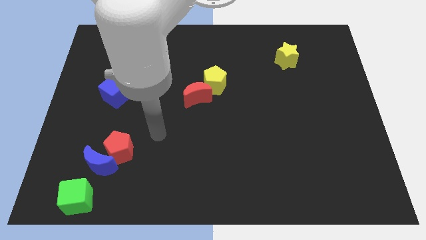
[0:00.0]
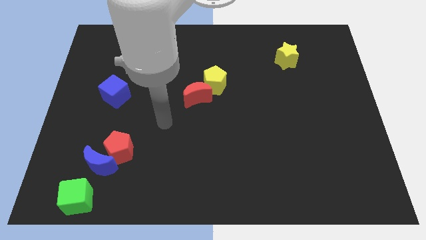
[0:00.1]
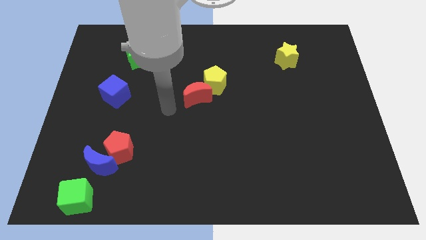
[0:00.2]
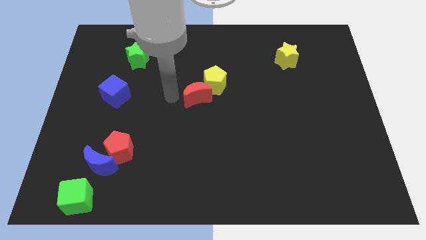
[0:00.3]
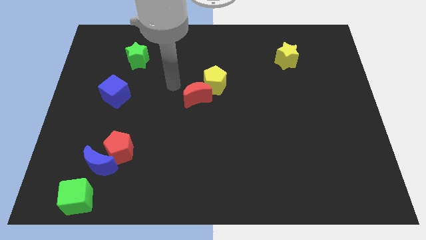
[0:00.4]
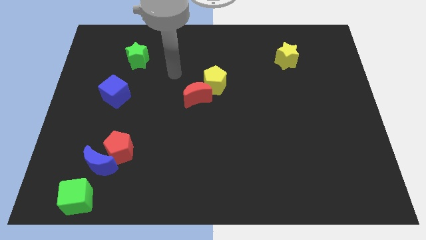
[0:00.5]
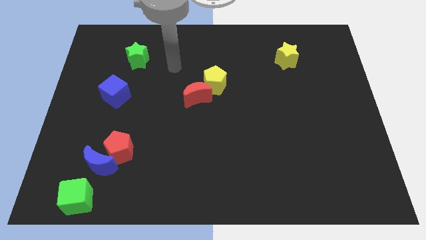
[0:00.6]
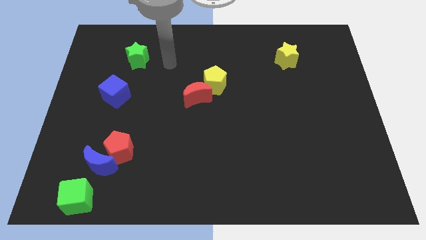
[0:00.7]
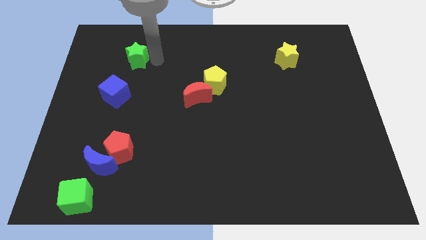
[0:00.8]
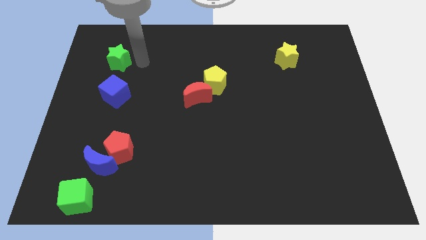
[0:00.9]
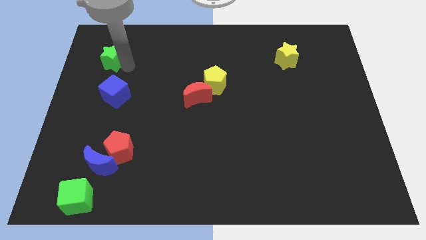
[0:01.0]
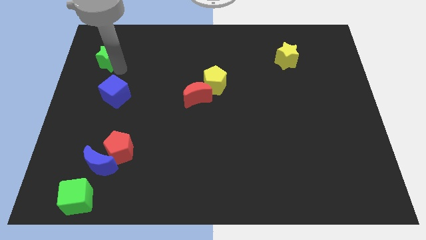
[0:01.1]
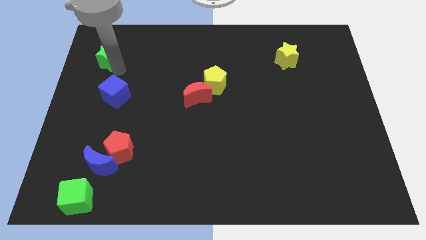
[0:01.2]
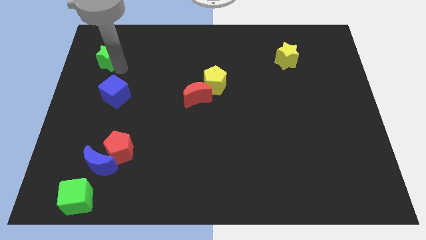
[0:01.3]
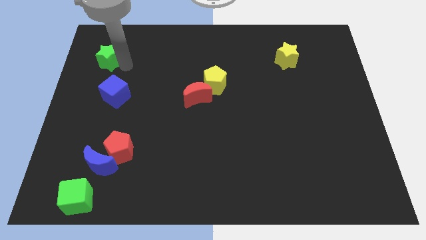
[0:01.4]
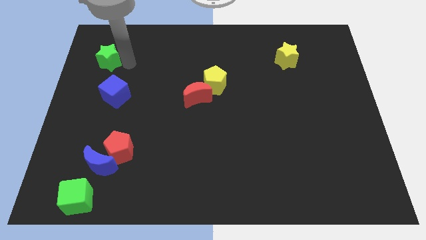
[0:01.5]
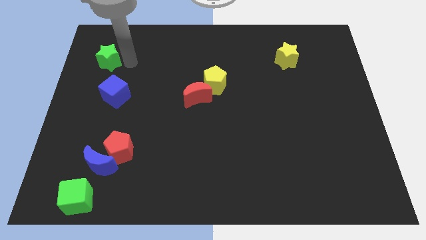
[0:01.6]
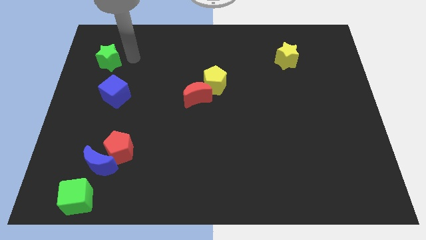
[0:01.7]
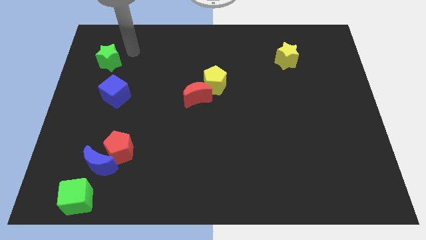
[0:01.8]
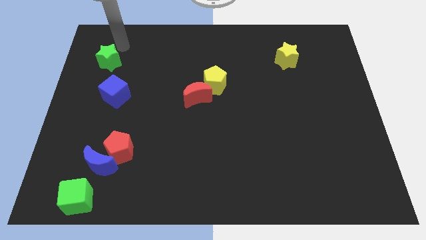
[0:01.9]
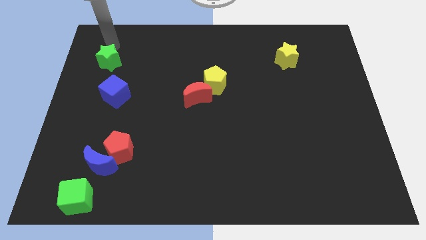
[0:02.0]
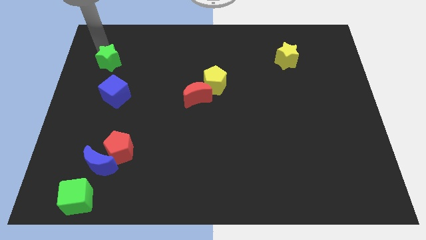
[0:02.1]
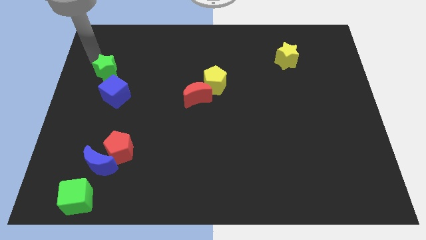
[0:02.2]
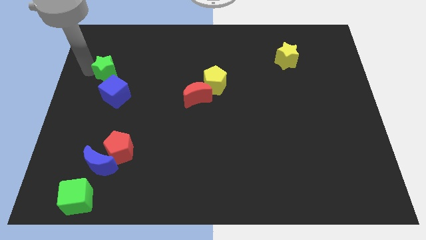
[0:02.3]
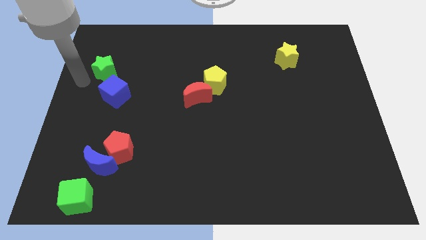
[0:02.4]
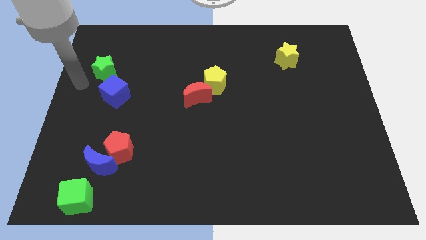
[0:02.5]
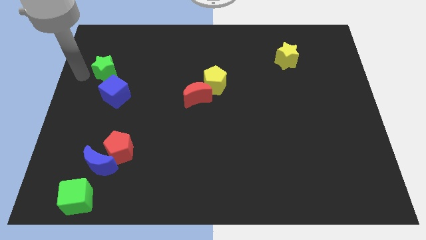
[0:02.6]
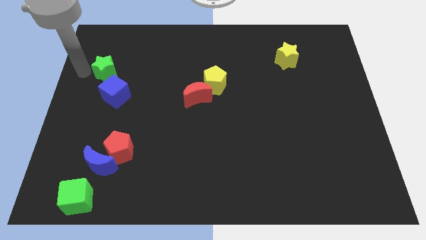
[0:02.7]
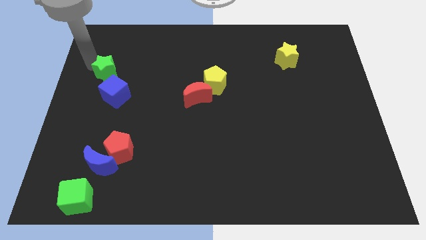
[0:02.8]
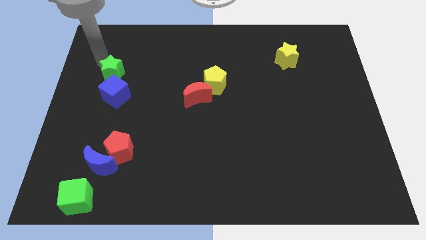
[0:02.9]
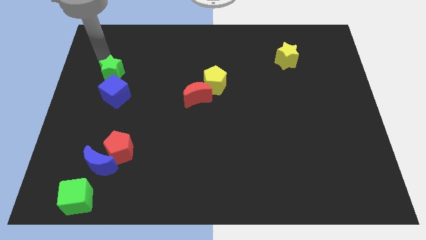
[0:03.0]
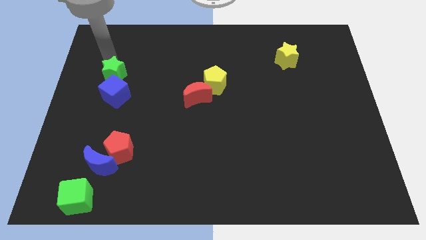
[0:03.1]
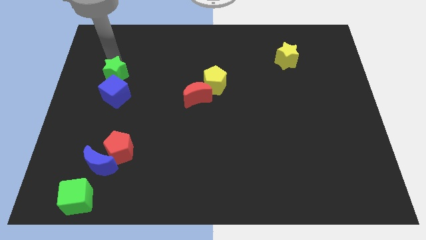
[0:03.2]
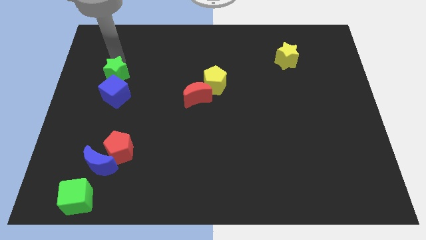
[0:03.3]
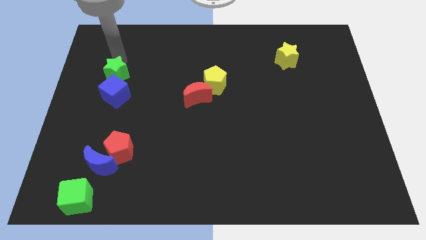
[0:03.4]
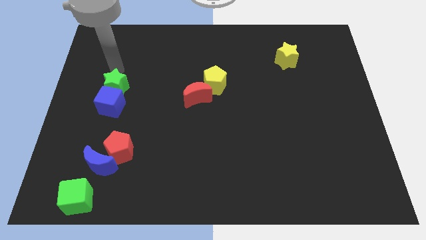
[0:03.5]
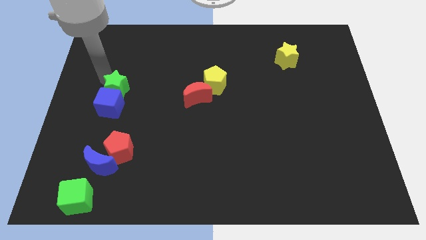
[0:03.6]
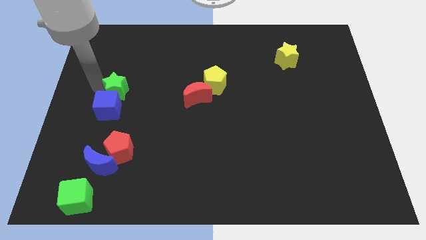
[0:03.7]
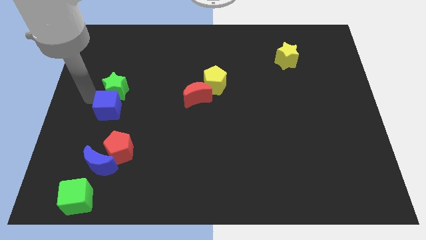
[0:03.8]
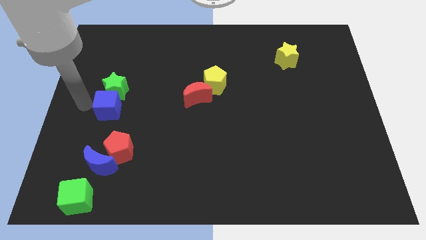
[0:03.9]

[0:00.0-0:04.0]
move the green star above into blue cube

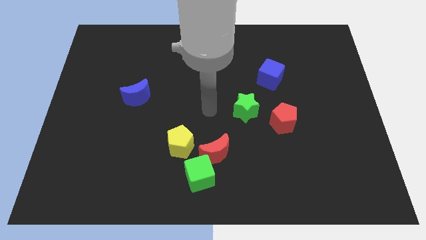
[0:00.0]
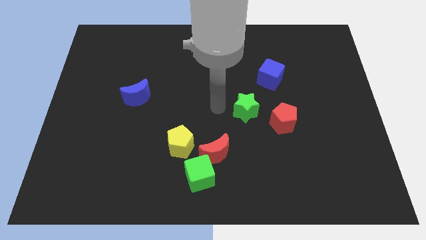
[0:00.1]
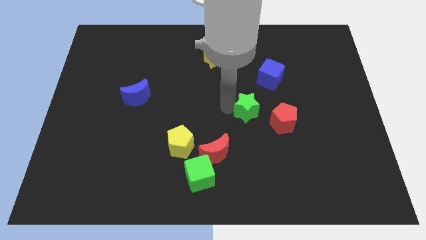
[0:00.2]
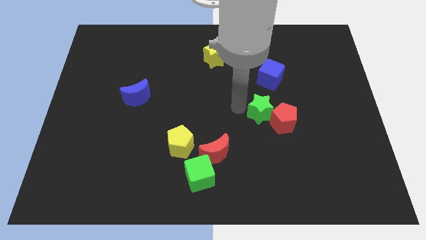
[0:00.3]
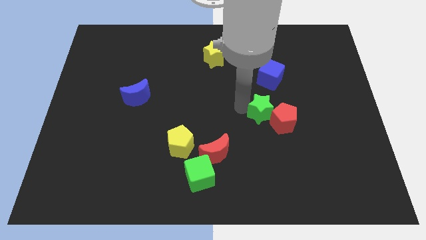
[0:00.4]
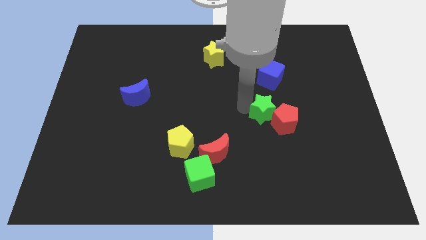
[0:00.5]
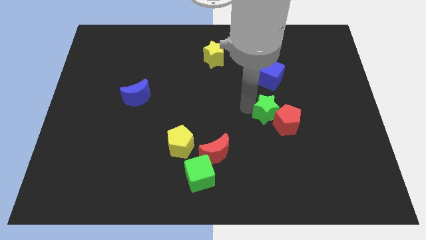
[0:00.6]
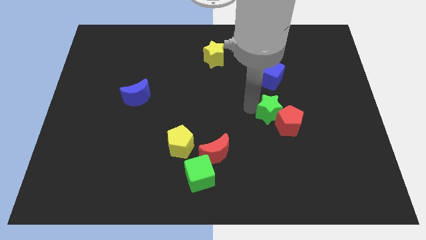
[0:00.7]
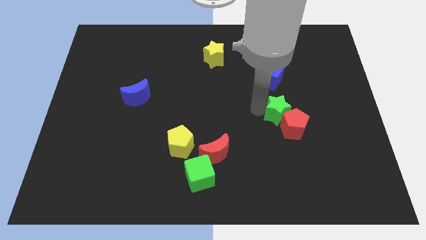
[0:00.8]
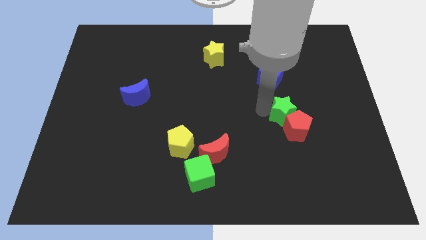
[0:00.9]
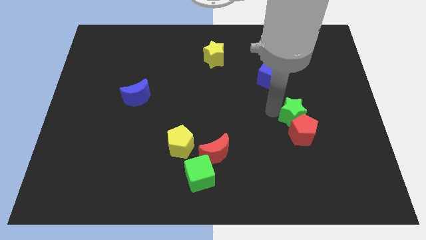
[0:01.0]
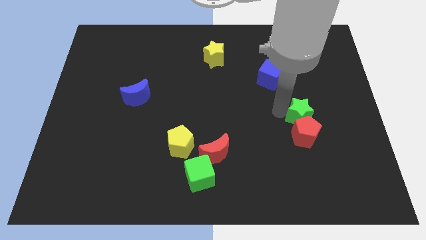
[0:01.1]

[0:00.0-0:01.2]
push green star in to red pentagon

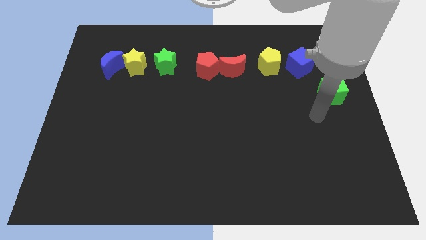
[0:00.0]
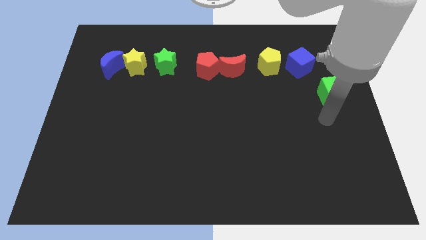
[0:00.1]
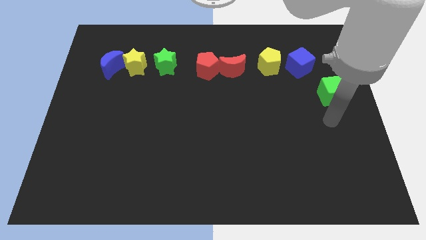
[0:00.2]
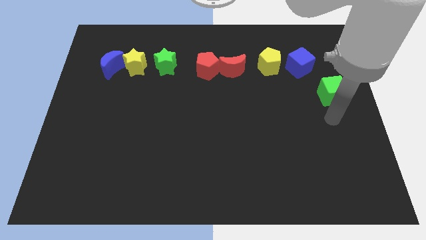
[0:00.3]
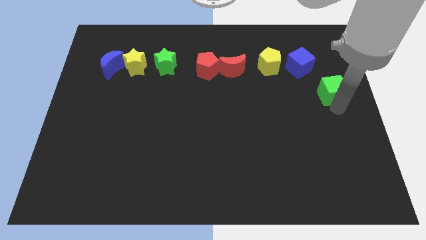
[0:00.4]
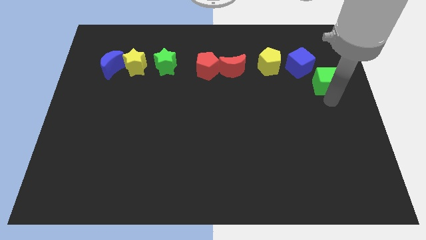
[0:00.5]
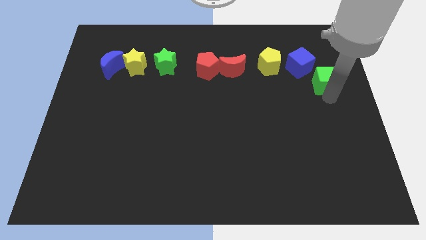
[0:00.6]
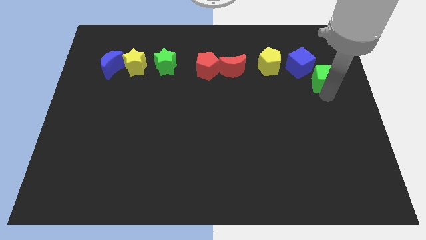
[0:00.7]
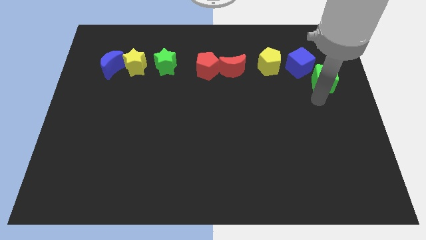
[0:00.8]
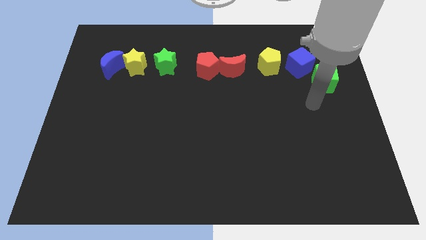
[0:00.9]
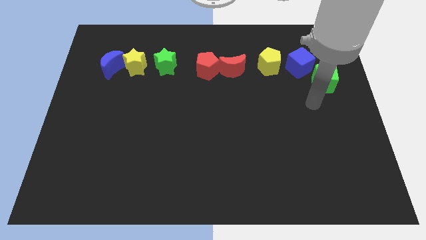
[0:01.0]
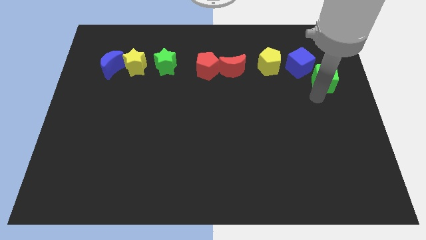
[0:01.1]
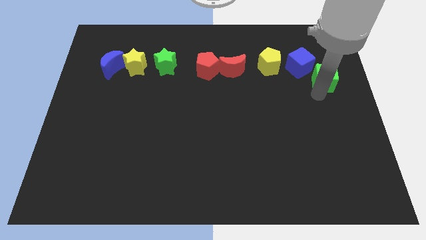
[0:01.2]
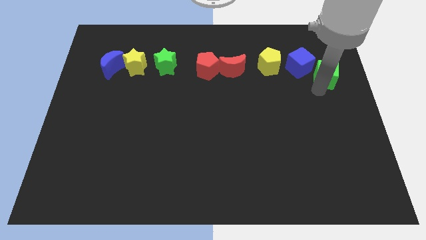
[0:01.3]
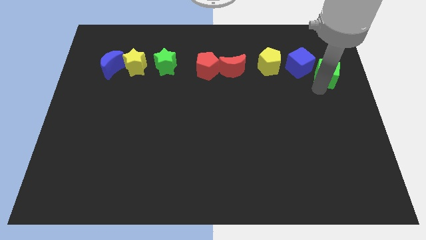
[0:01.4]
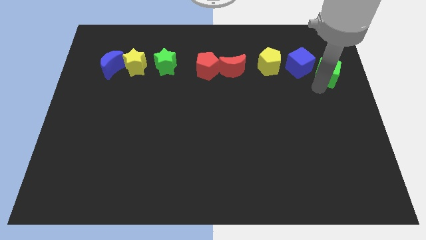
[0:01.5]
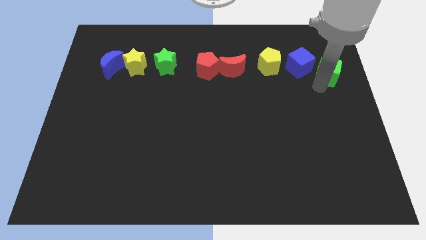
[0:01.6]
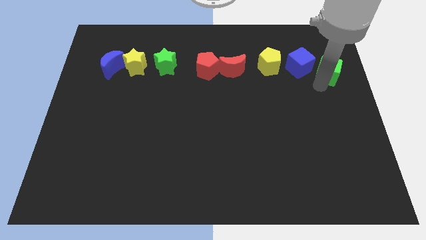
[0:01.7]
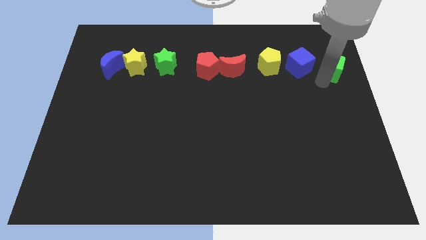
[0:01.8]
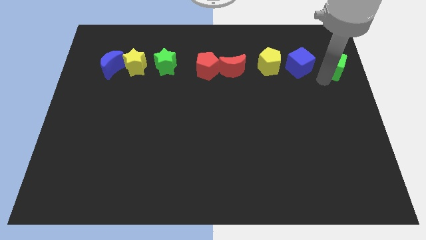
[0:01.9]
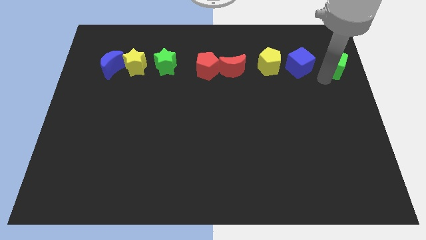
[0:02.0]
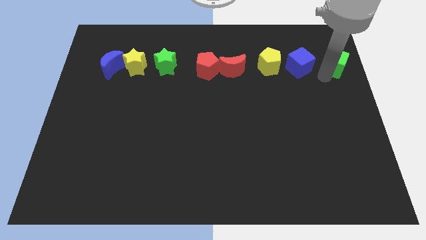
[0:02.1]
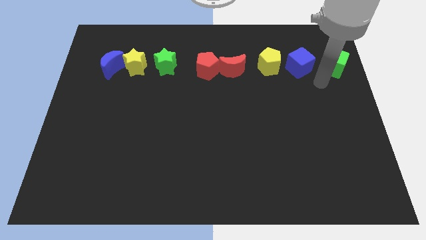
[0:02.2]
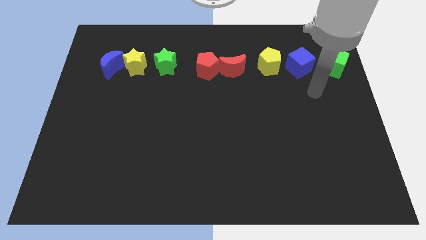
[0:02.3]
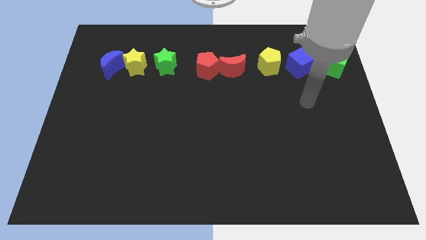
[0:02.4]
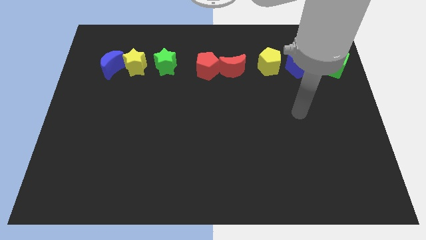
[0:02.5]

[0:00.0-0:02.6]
place green cube to the right of blue cube

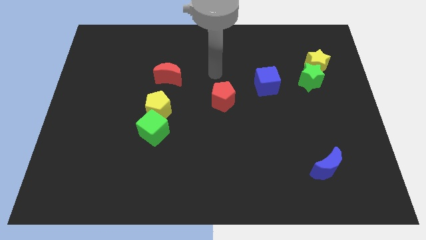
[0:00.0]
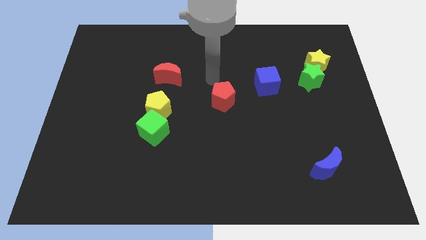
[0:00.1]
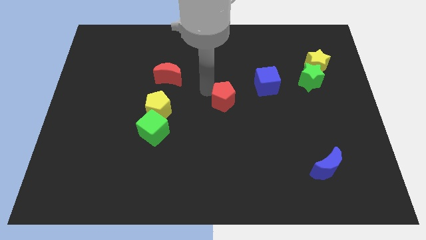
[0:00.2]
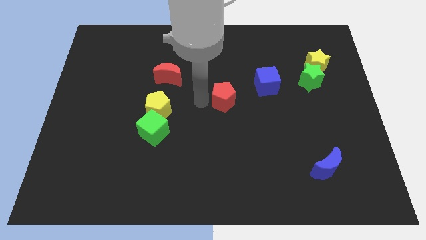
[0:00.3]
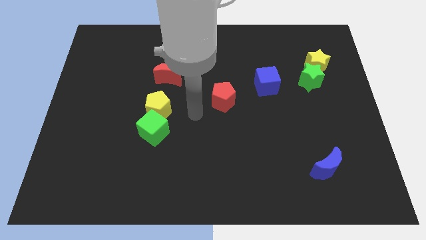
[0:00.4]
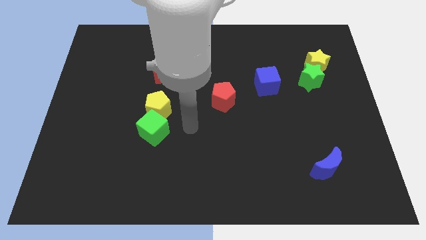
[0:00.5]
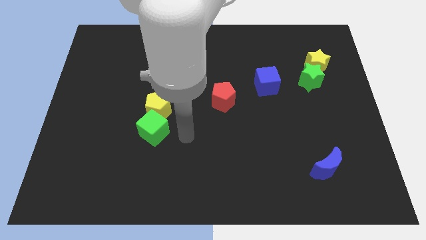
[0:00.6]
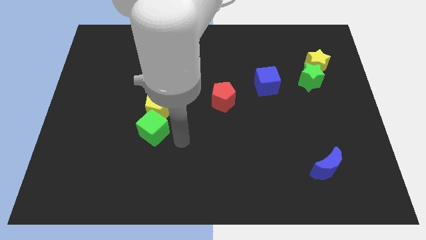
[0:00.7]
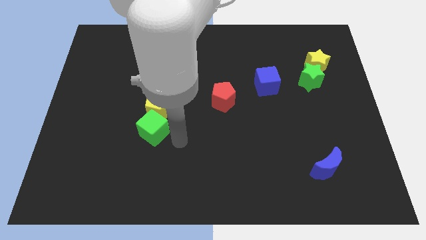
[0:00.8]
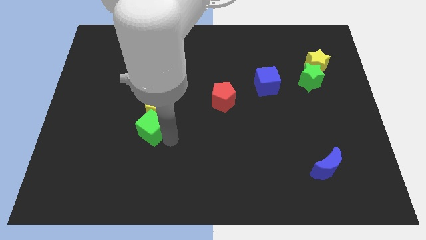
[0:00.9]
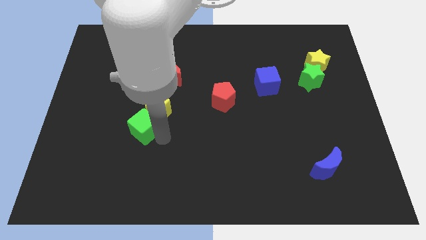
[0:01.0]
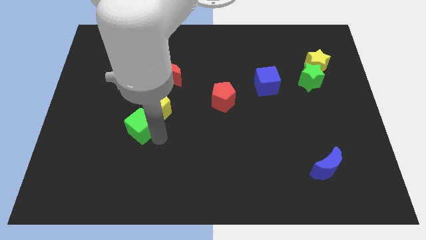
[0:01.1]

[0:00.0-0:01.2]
touch the right side of the green cube
